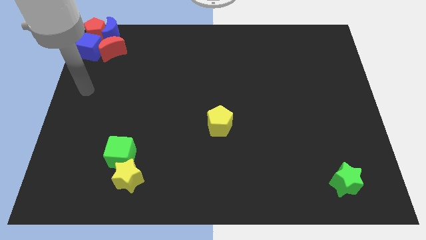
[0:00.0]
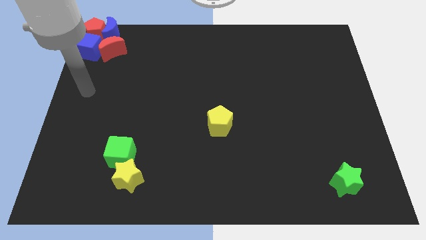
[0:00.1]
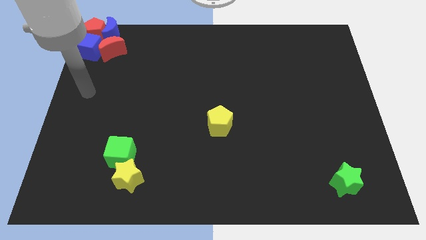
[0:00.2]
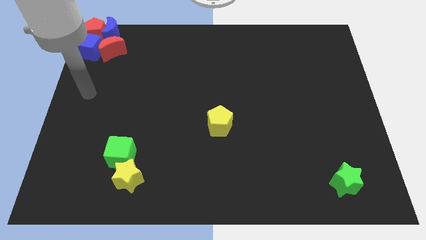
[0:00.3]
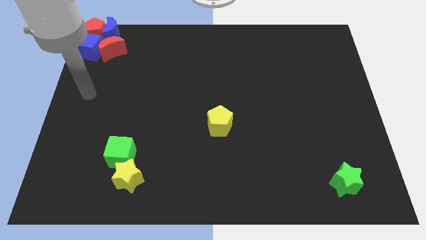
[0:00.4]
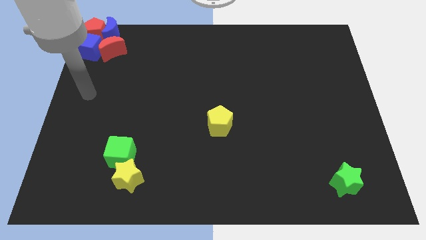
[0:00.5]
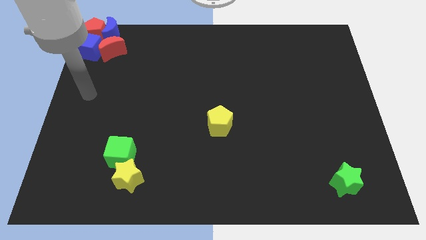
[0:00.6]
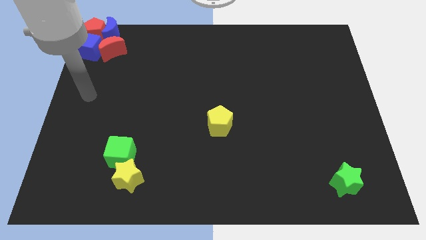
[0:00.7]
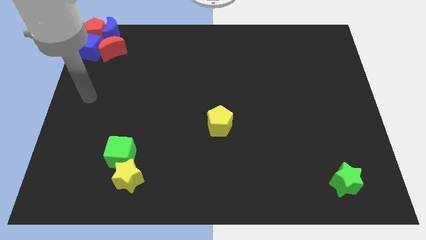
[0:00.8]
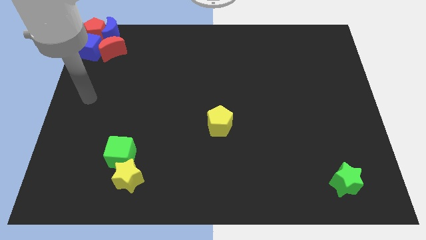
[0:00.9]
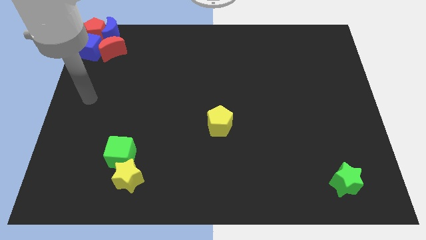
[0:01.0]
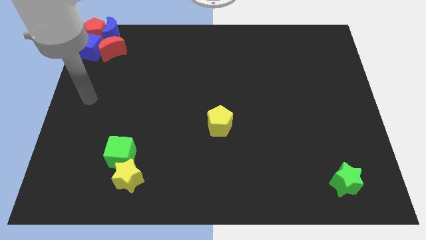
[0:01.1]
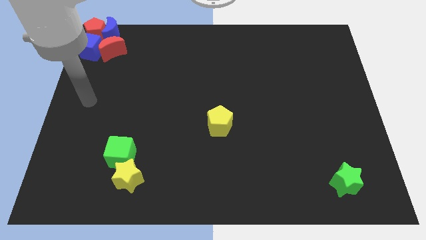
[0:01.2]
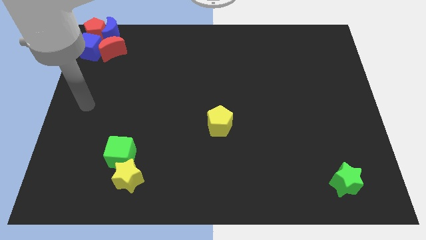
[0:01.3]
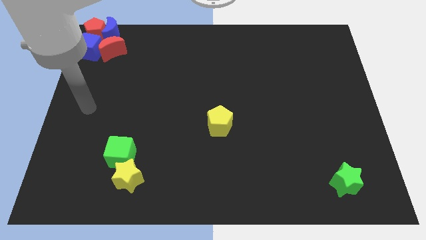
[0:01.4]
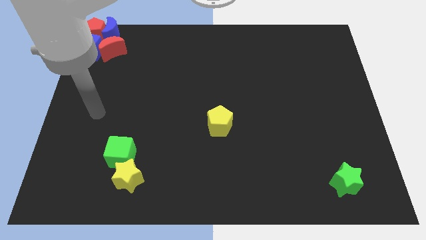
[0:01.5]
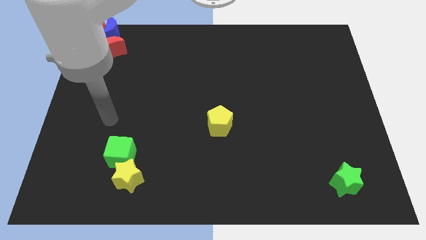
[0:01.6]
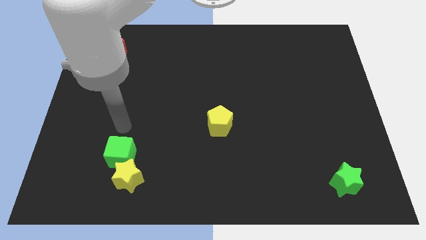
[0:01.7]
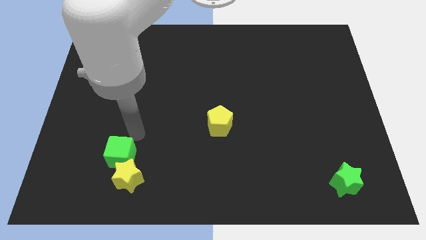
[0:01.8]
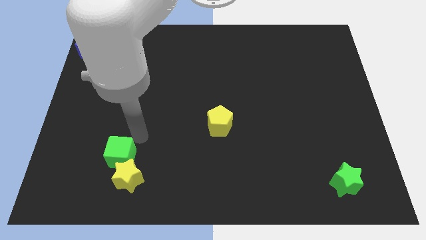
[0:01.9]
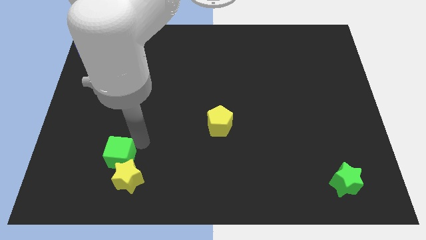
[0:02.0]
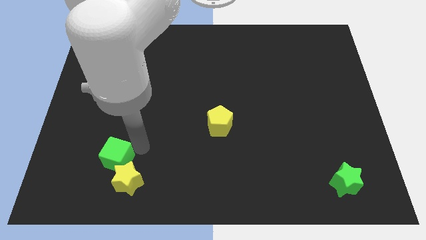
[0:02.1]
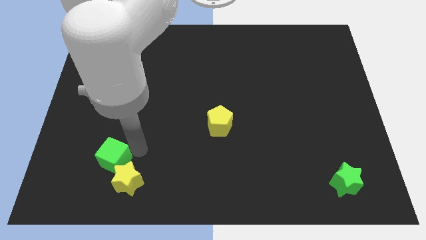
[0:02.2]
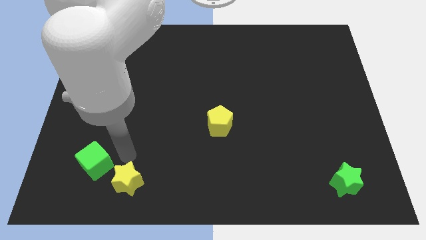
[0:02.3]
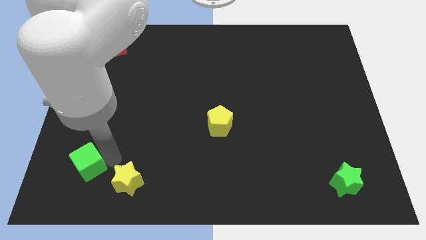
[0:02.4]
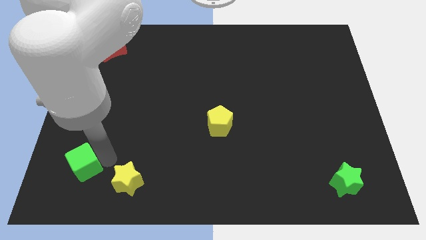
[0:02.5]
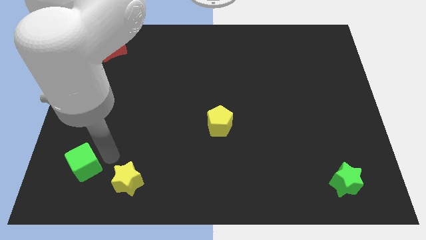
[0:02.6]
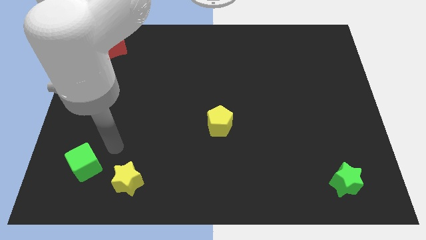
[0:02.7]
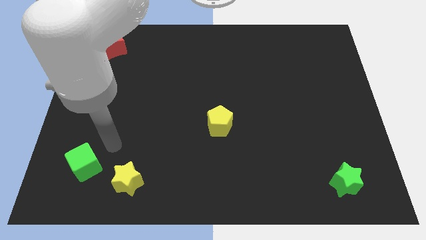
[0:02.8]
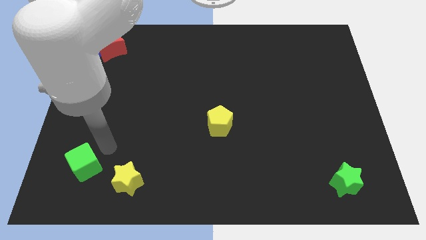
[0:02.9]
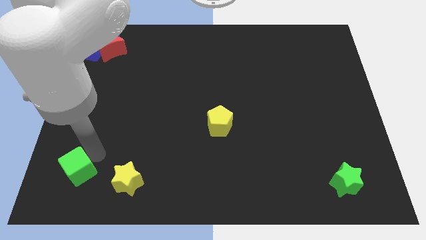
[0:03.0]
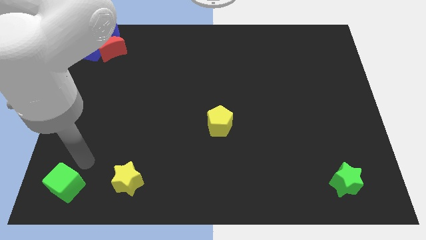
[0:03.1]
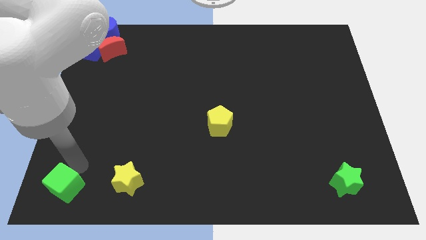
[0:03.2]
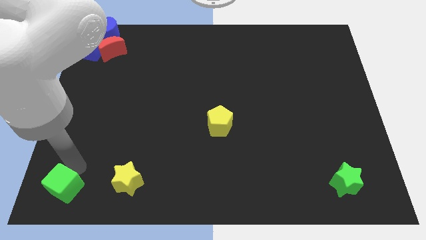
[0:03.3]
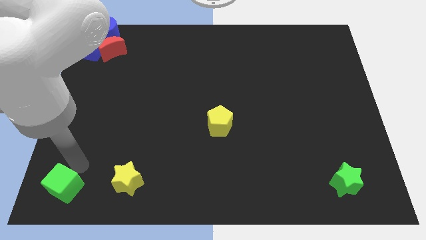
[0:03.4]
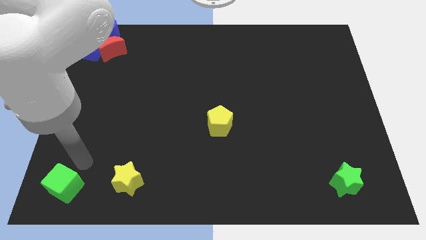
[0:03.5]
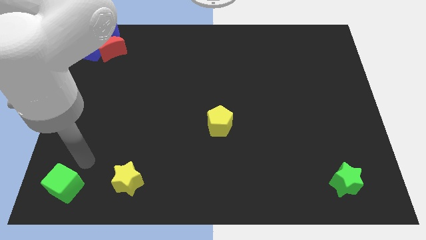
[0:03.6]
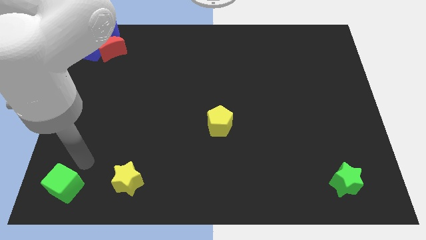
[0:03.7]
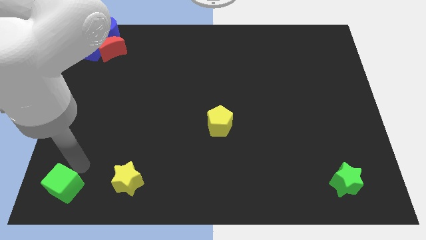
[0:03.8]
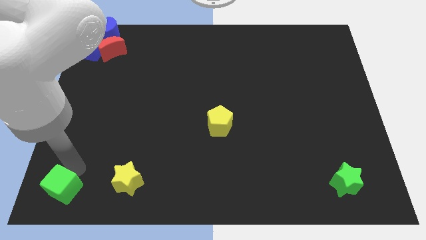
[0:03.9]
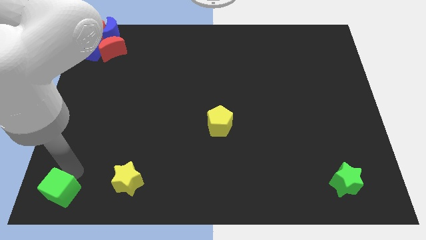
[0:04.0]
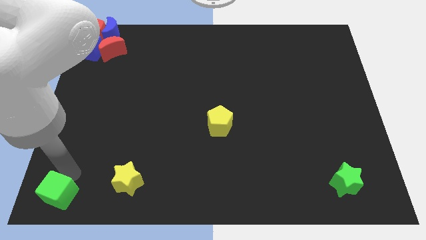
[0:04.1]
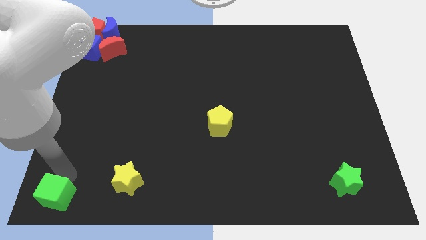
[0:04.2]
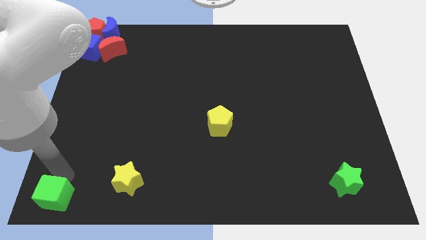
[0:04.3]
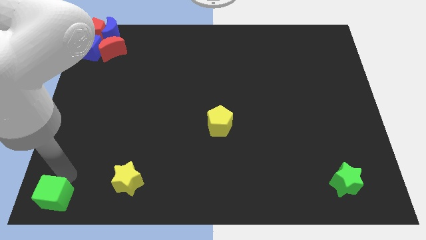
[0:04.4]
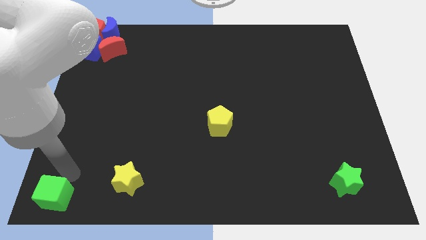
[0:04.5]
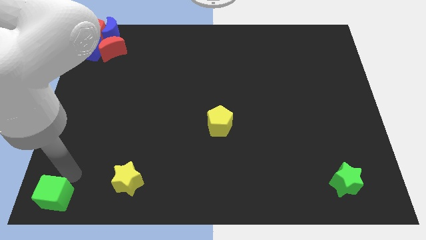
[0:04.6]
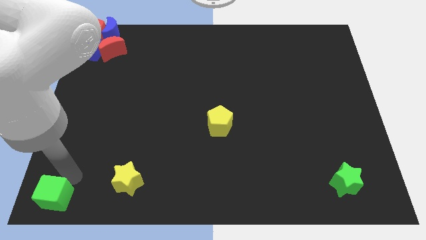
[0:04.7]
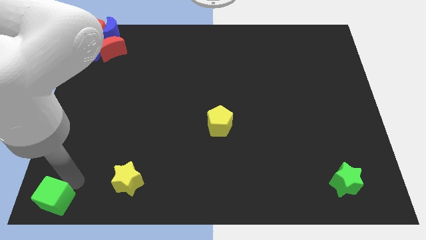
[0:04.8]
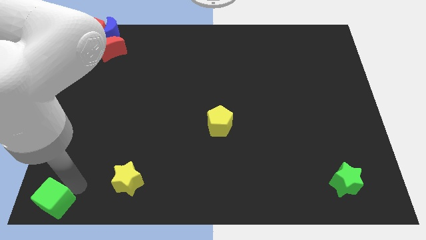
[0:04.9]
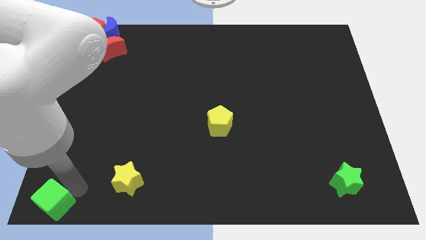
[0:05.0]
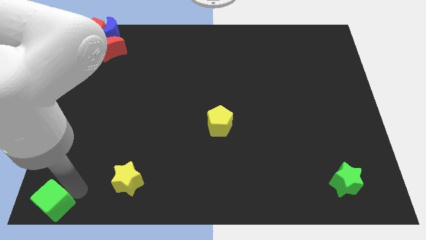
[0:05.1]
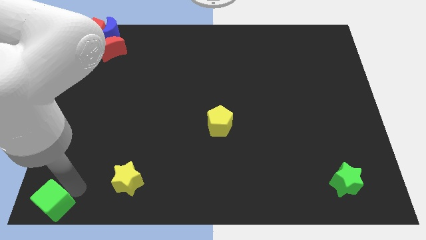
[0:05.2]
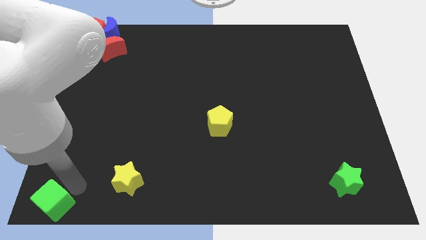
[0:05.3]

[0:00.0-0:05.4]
separate the green cube from the yellow star

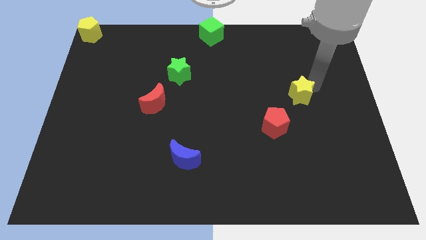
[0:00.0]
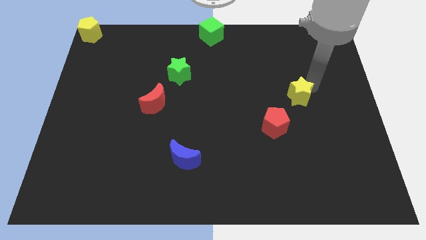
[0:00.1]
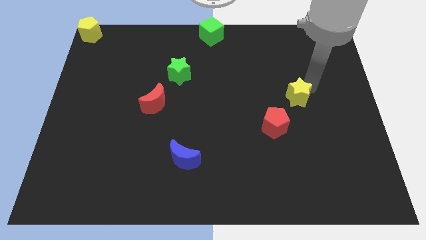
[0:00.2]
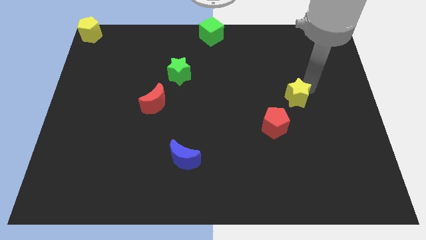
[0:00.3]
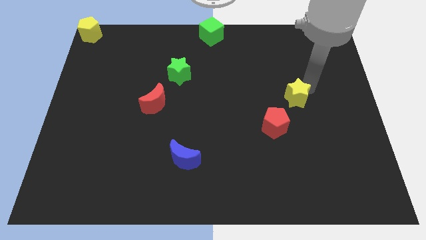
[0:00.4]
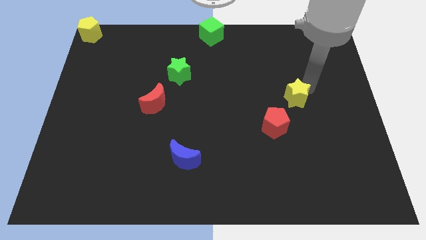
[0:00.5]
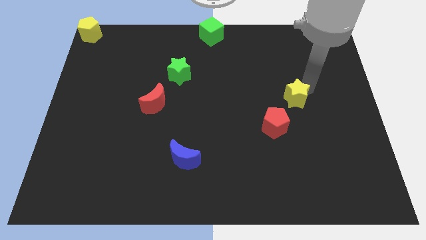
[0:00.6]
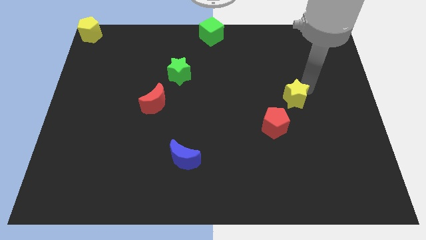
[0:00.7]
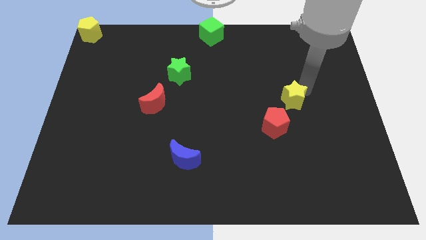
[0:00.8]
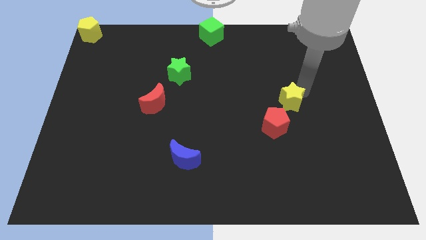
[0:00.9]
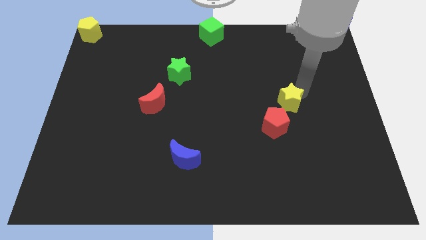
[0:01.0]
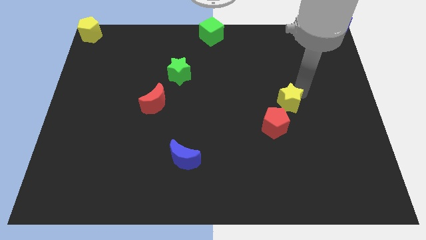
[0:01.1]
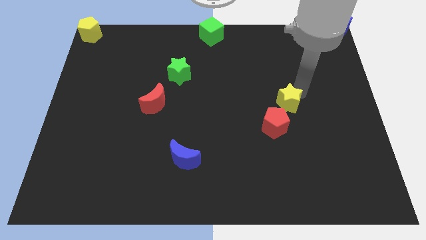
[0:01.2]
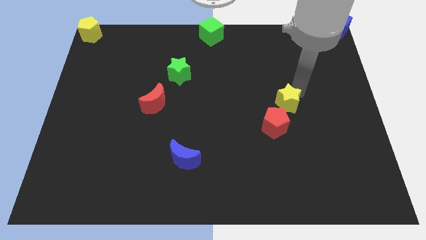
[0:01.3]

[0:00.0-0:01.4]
move the yellow star to the top right side of the red pentagon

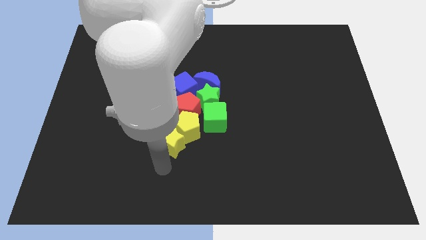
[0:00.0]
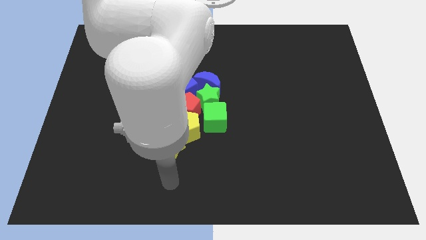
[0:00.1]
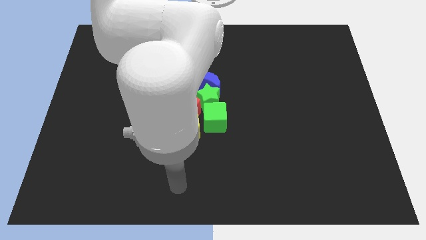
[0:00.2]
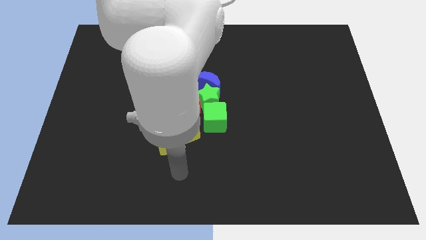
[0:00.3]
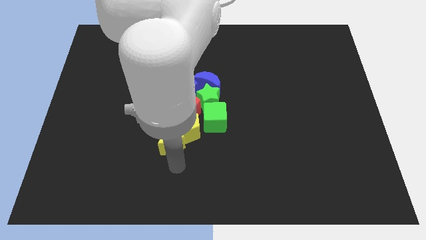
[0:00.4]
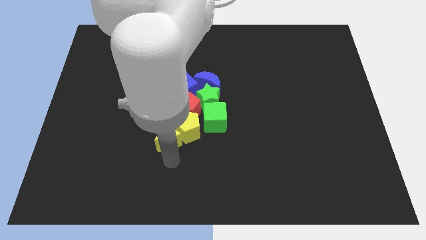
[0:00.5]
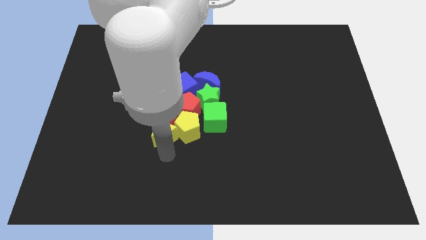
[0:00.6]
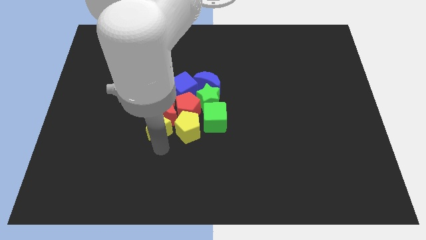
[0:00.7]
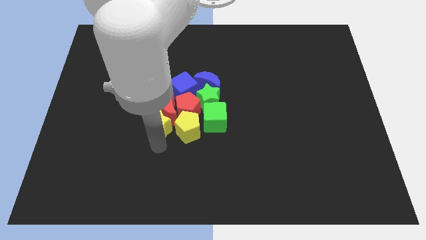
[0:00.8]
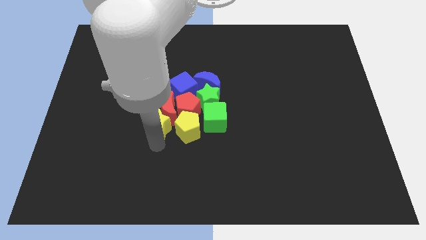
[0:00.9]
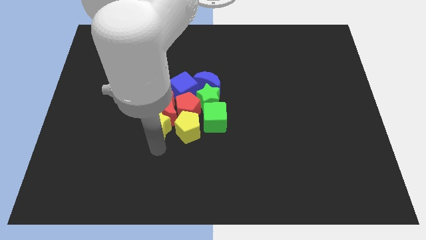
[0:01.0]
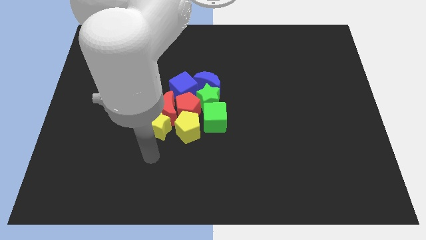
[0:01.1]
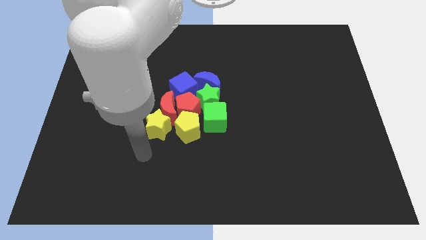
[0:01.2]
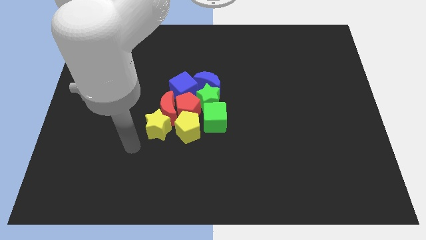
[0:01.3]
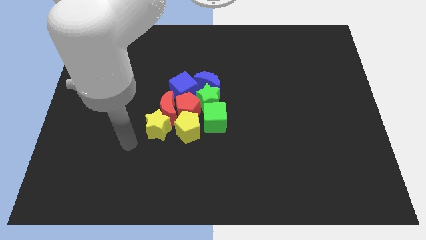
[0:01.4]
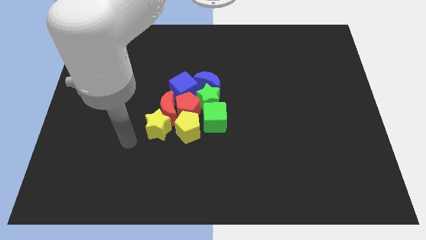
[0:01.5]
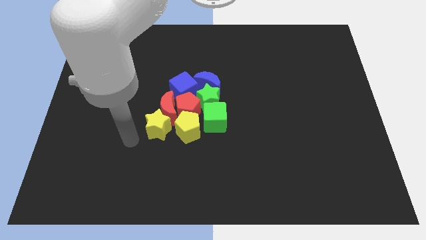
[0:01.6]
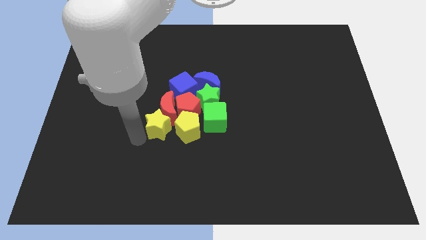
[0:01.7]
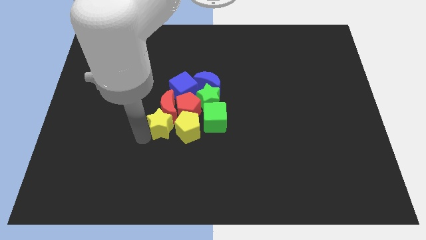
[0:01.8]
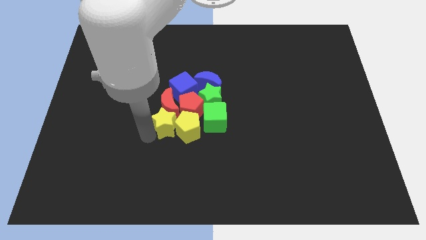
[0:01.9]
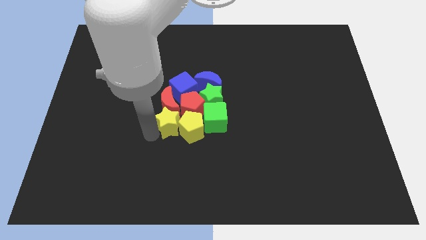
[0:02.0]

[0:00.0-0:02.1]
place the yellow star to the left of yellow pentagon

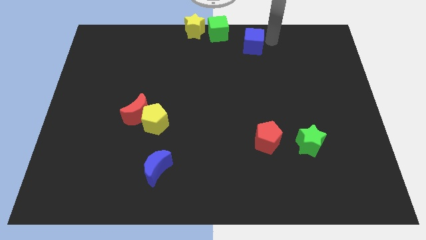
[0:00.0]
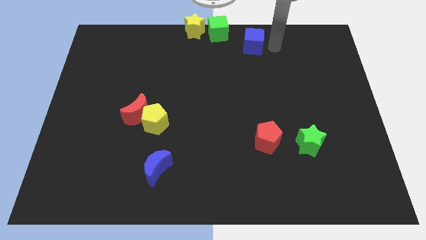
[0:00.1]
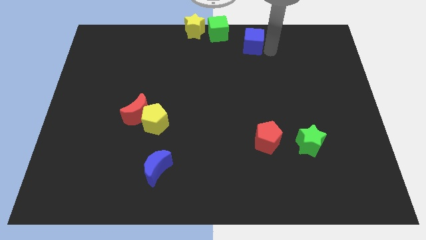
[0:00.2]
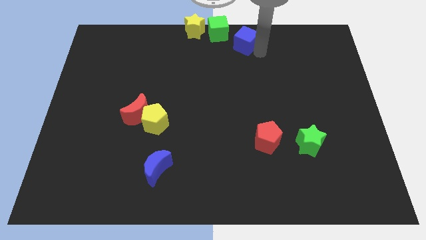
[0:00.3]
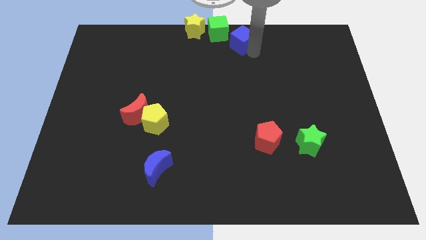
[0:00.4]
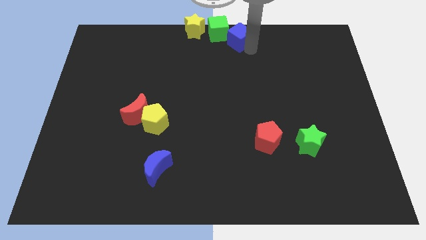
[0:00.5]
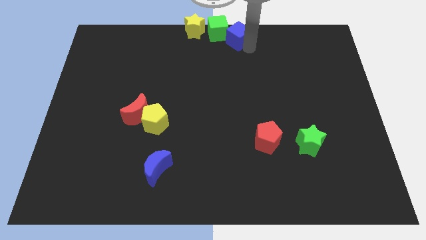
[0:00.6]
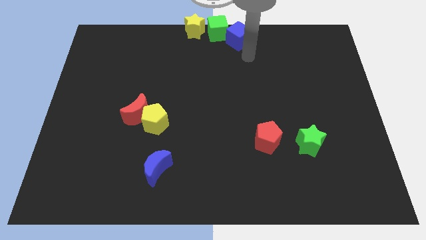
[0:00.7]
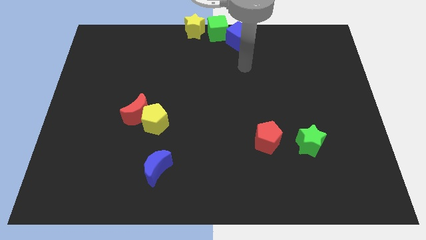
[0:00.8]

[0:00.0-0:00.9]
place the blue cube to the right of the green cube
